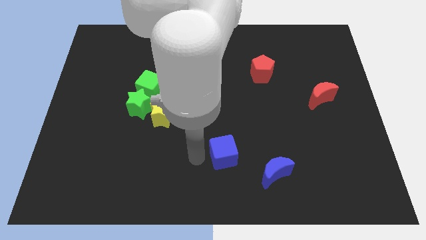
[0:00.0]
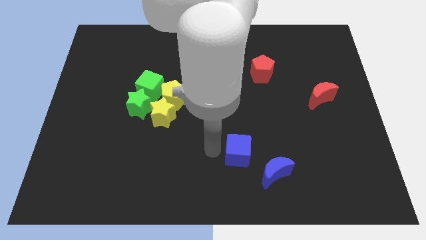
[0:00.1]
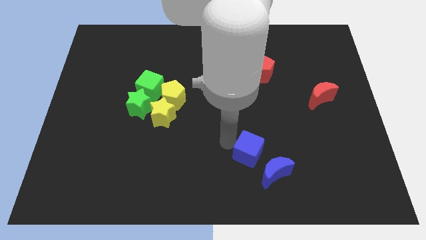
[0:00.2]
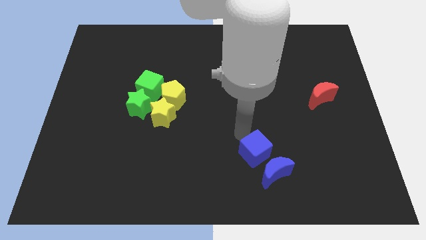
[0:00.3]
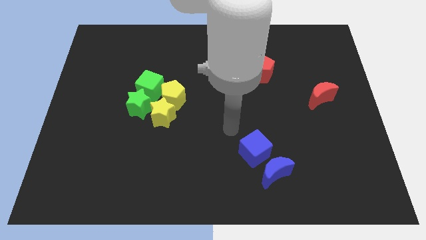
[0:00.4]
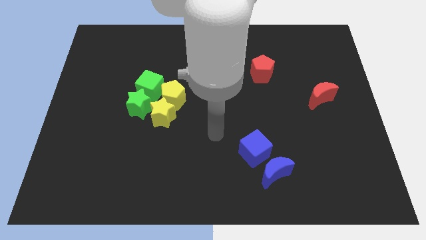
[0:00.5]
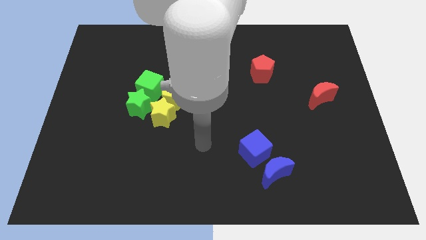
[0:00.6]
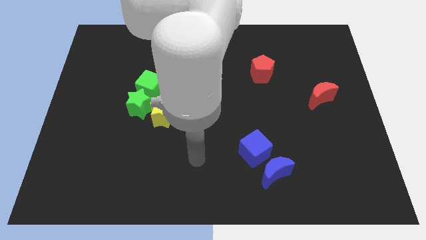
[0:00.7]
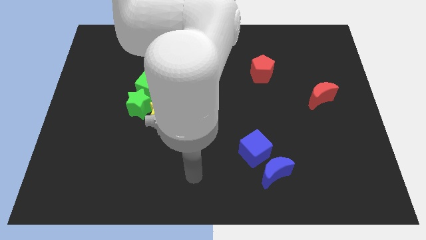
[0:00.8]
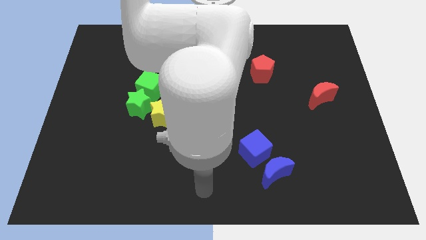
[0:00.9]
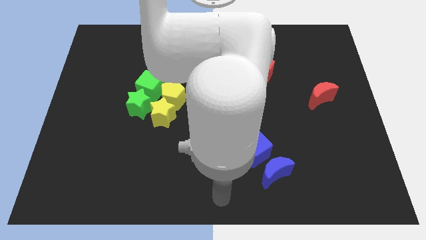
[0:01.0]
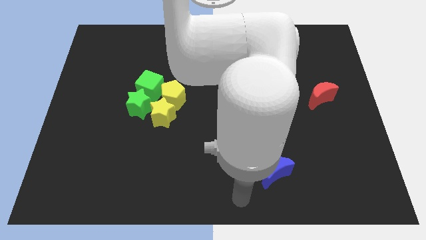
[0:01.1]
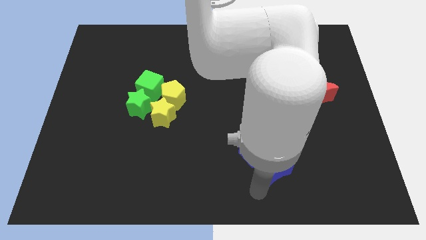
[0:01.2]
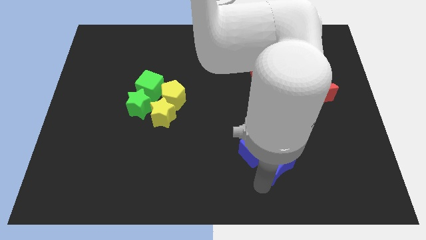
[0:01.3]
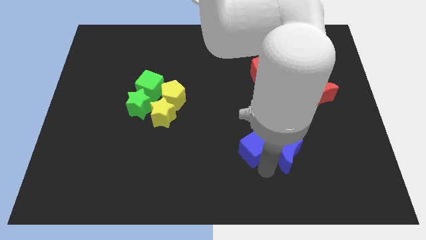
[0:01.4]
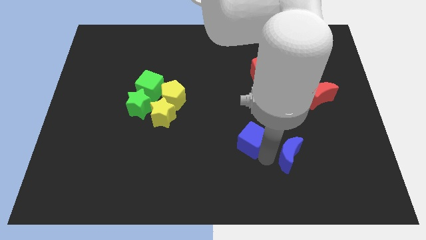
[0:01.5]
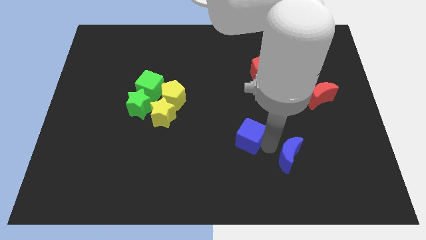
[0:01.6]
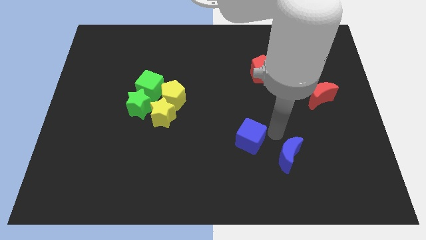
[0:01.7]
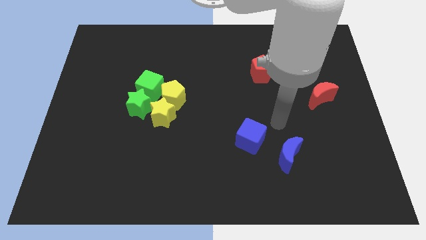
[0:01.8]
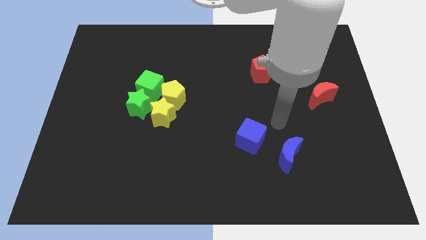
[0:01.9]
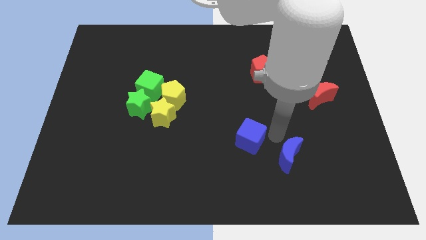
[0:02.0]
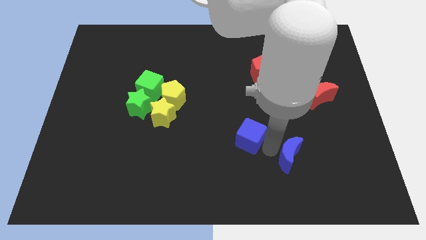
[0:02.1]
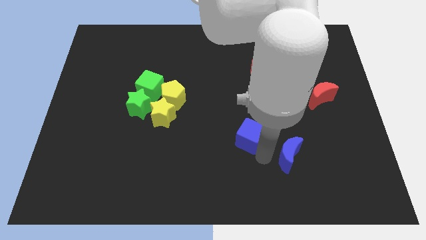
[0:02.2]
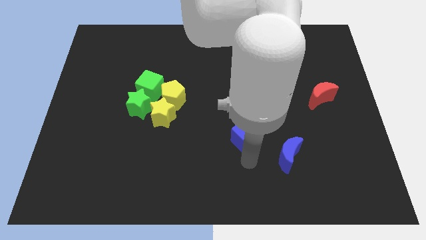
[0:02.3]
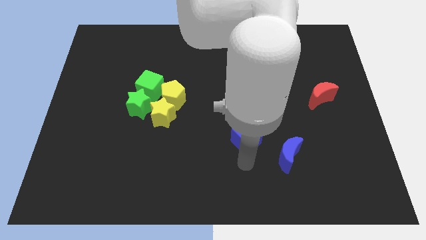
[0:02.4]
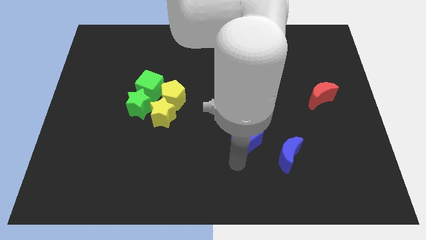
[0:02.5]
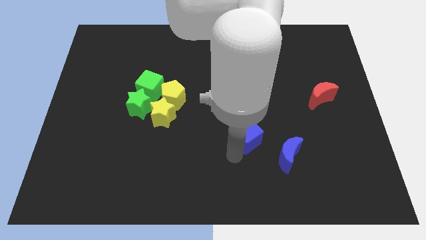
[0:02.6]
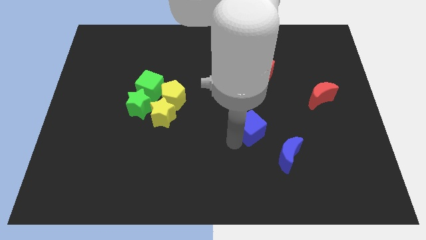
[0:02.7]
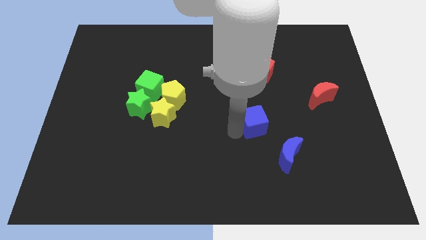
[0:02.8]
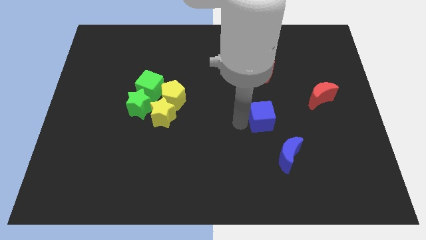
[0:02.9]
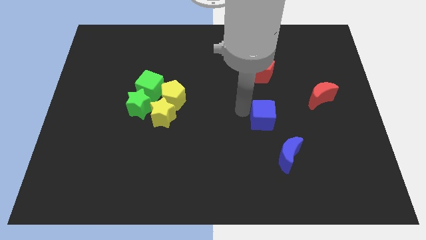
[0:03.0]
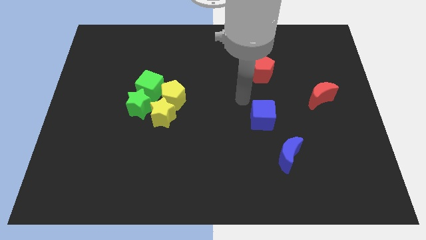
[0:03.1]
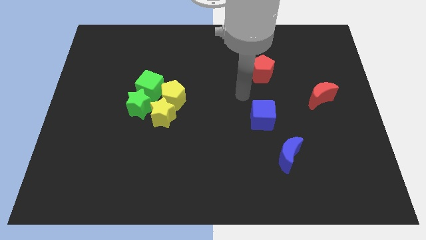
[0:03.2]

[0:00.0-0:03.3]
place the blue cube in between the blue moon and red pentagon

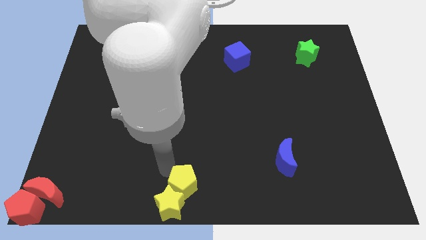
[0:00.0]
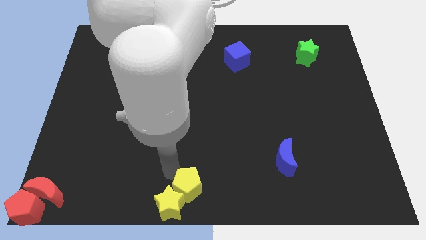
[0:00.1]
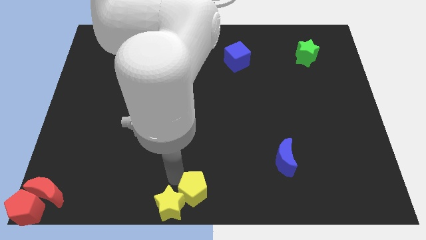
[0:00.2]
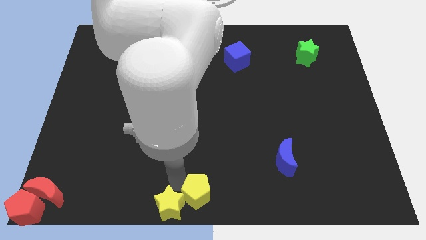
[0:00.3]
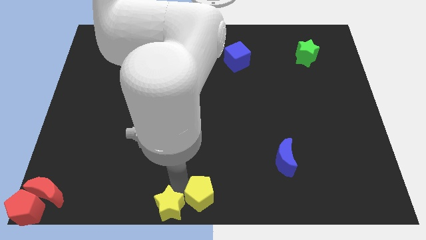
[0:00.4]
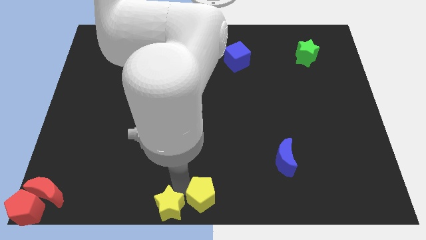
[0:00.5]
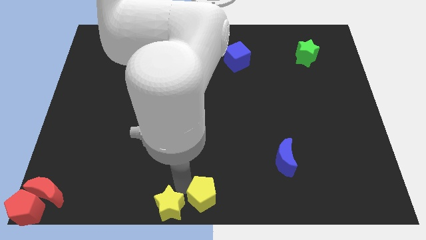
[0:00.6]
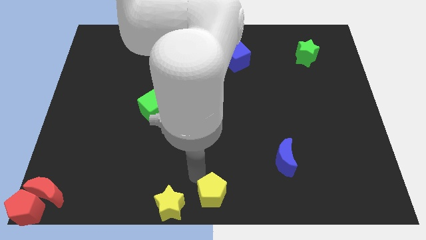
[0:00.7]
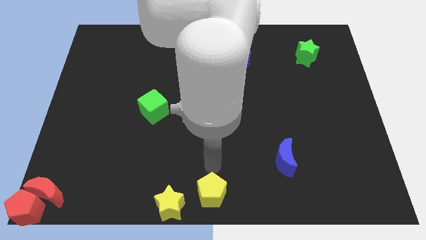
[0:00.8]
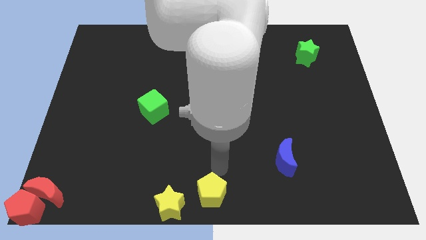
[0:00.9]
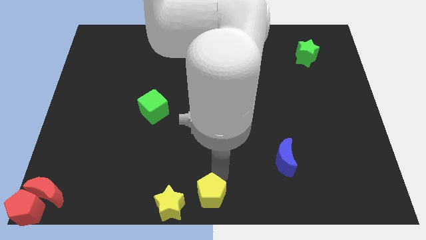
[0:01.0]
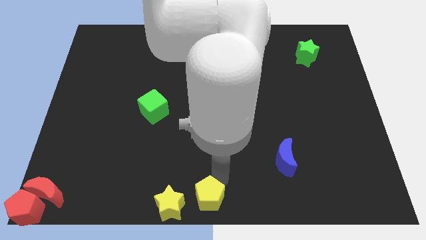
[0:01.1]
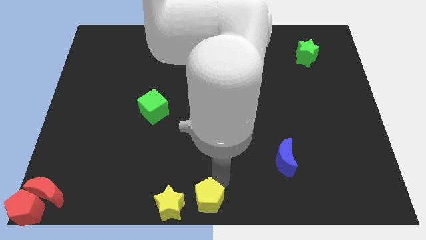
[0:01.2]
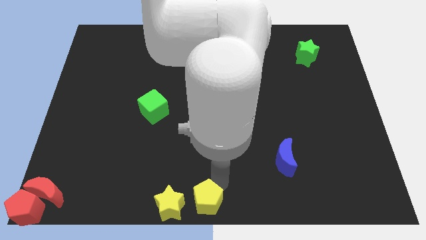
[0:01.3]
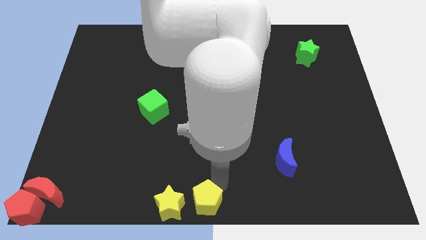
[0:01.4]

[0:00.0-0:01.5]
put the yellow pentagon at the bottom center of the board

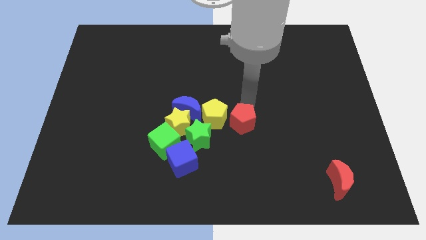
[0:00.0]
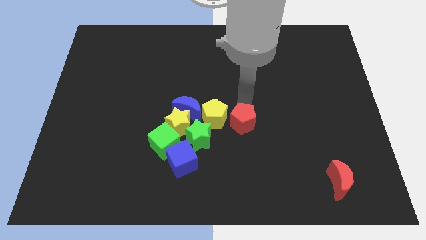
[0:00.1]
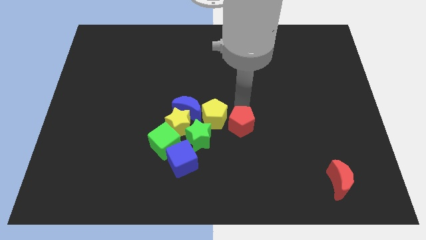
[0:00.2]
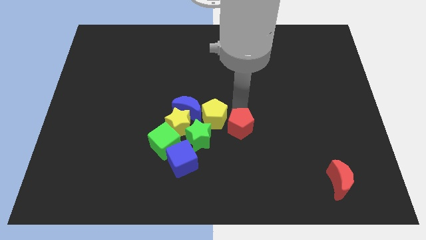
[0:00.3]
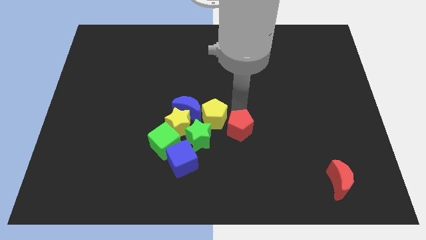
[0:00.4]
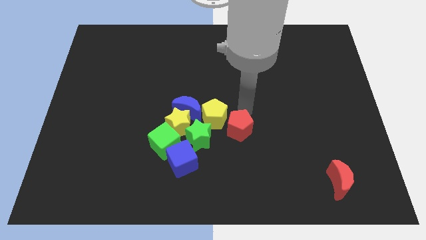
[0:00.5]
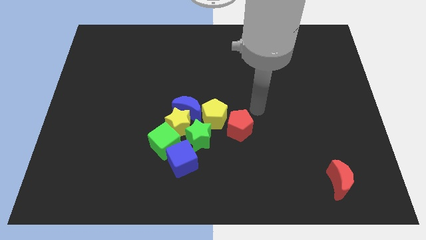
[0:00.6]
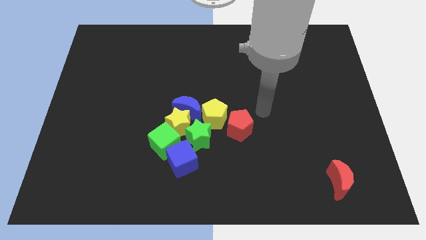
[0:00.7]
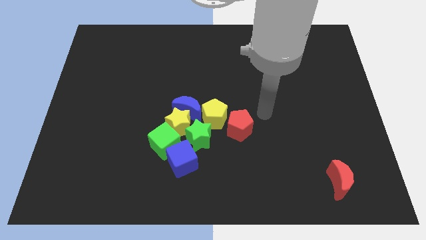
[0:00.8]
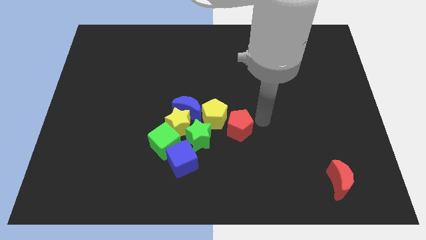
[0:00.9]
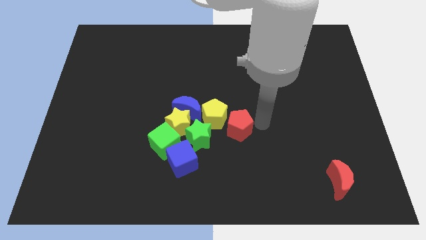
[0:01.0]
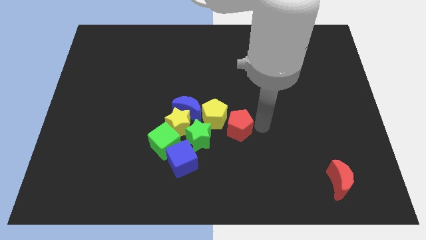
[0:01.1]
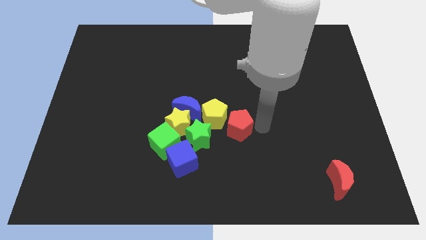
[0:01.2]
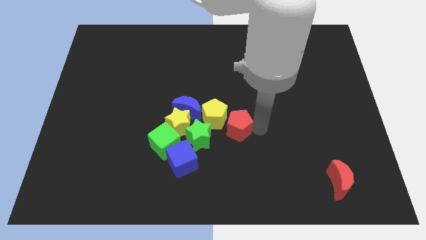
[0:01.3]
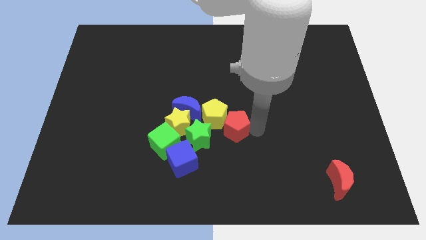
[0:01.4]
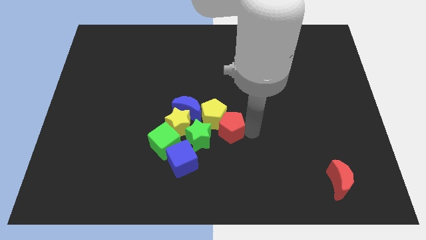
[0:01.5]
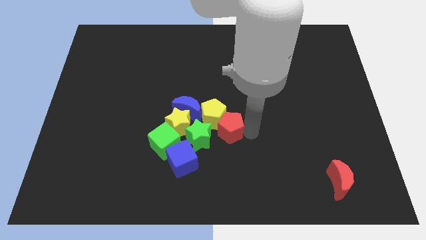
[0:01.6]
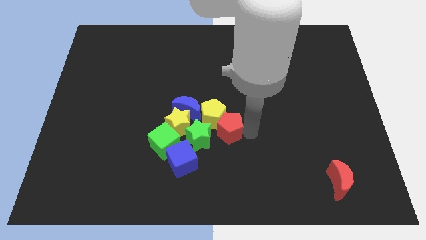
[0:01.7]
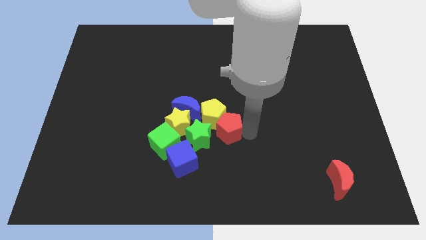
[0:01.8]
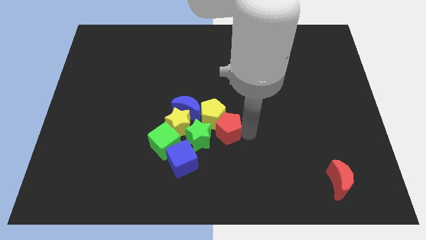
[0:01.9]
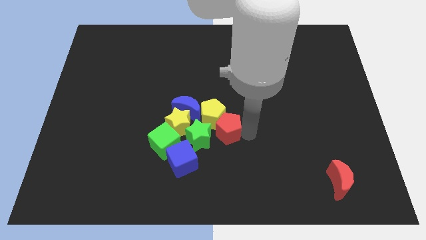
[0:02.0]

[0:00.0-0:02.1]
push the red pentagon towards the yellow pentagon

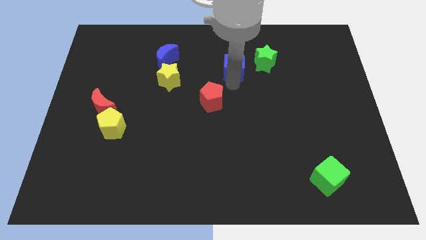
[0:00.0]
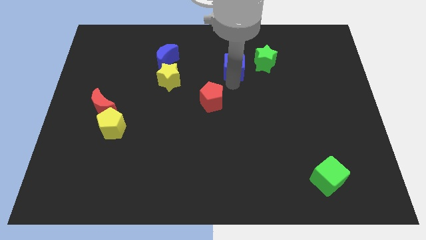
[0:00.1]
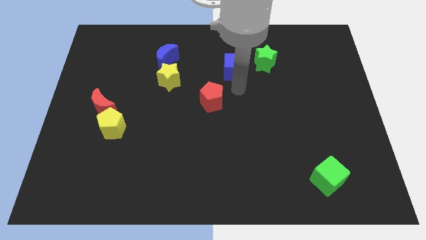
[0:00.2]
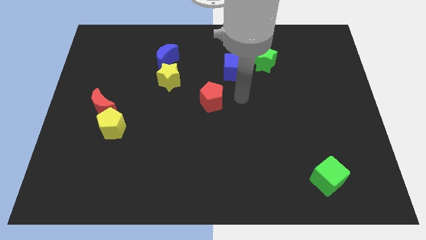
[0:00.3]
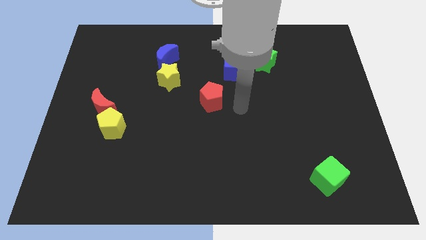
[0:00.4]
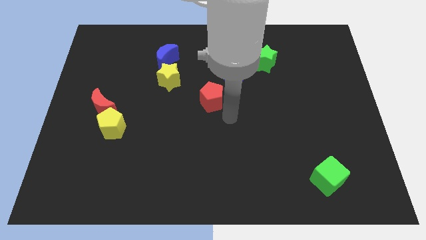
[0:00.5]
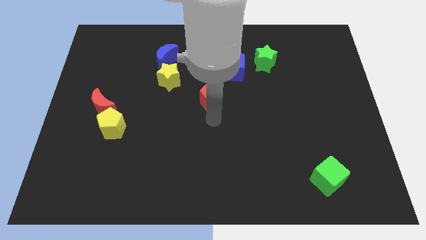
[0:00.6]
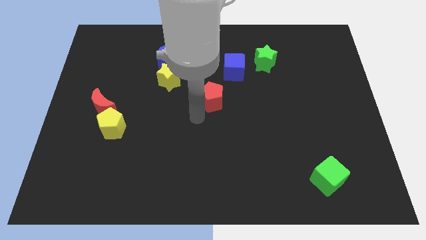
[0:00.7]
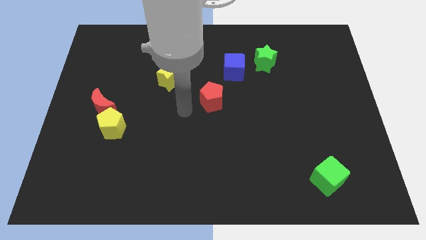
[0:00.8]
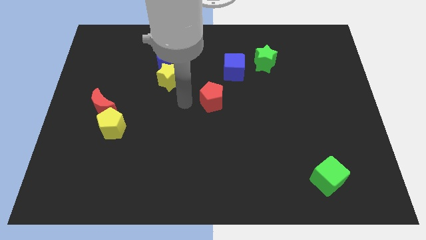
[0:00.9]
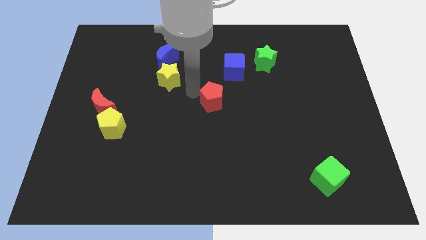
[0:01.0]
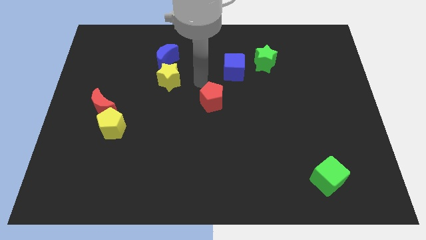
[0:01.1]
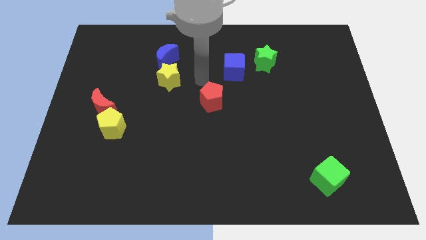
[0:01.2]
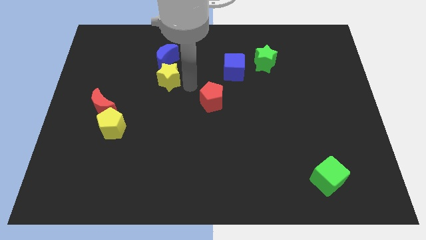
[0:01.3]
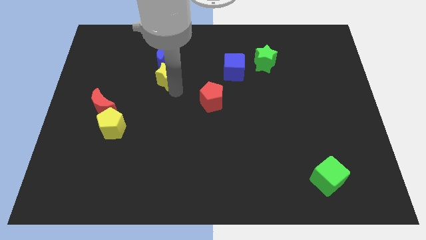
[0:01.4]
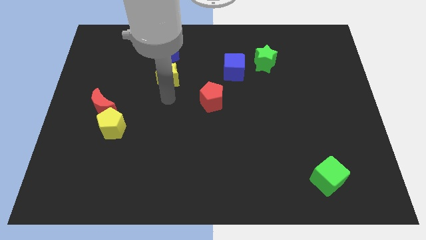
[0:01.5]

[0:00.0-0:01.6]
tap at the bottom side of the yellow star

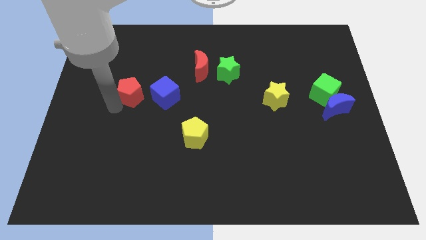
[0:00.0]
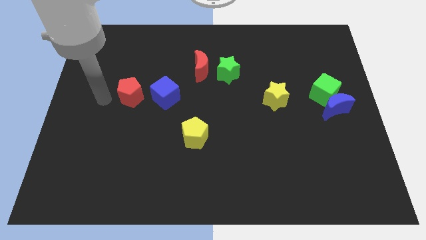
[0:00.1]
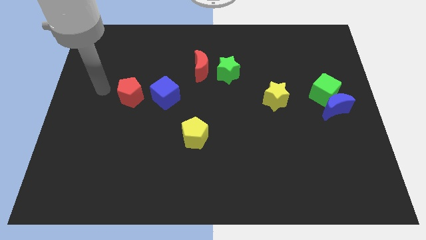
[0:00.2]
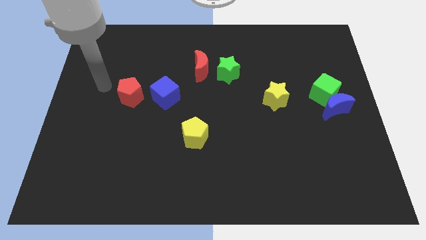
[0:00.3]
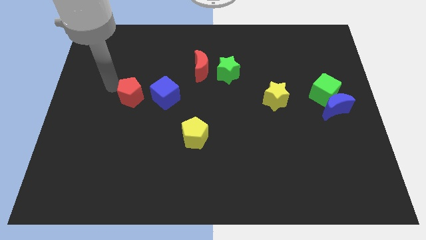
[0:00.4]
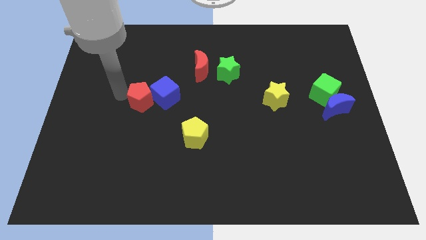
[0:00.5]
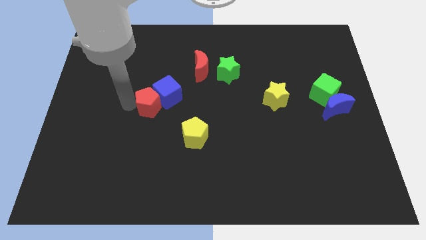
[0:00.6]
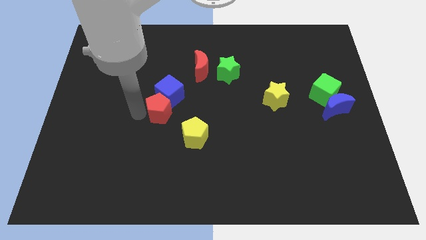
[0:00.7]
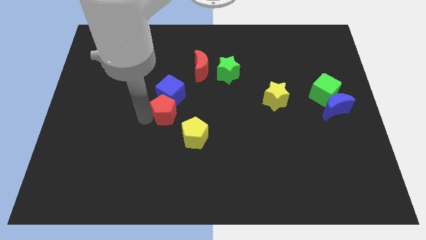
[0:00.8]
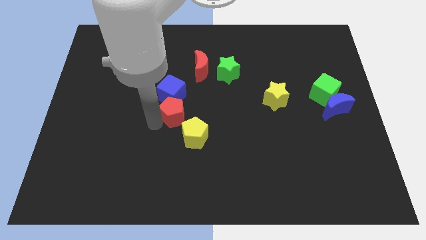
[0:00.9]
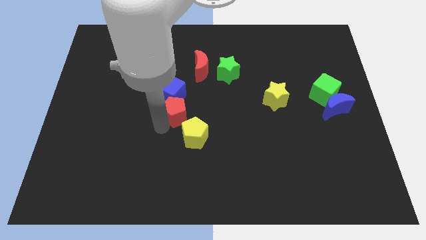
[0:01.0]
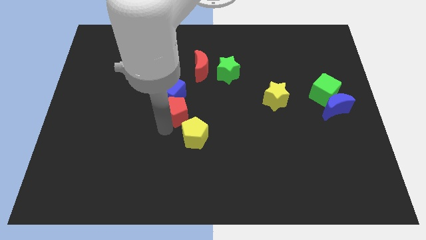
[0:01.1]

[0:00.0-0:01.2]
push the red pentagon below the blue cube
